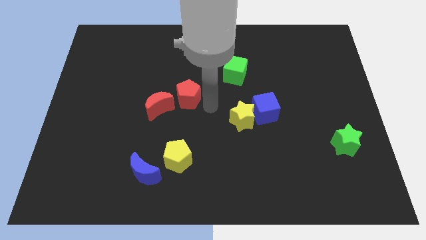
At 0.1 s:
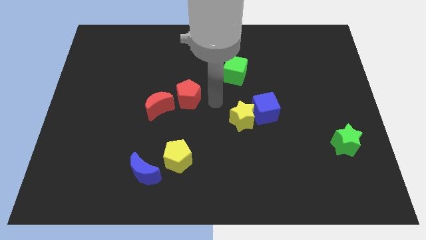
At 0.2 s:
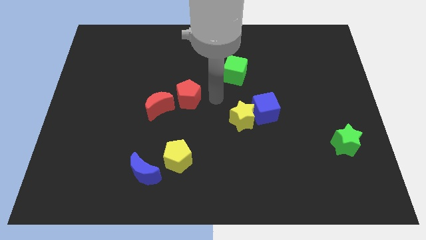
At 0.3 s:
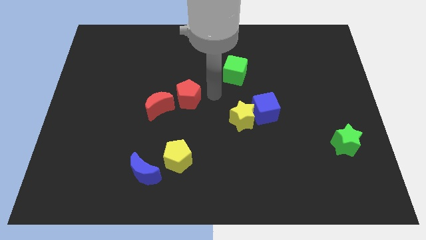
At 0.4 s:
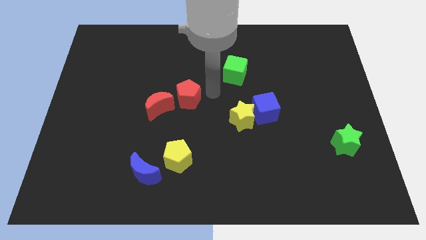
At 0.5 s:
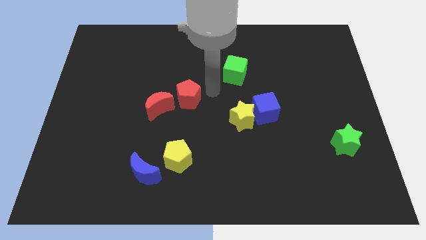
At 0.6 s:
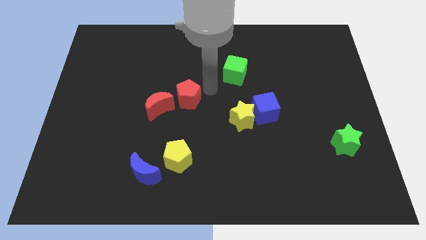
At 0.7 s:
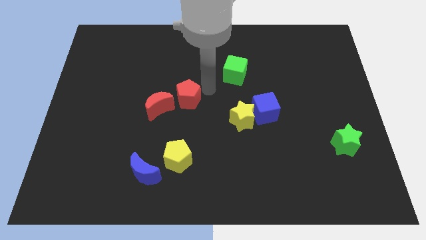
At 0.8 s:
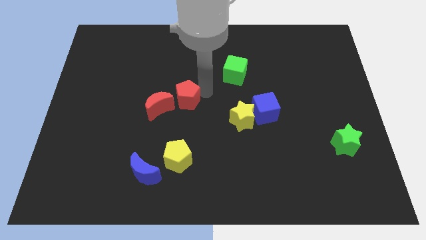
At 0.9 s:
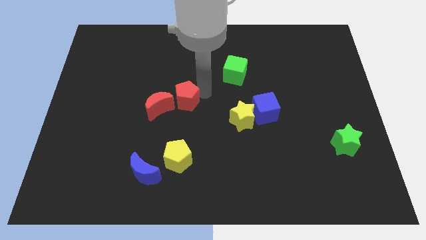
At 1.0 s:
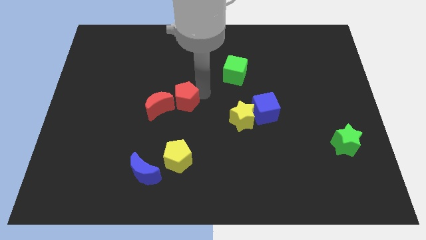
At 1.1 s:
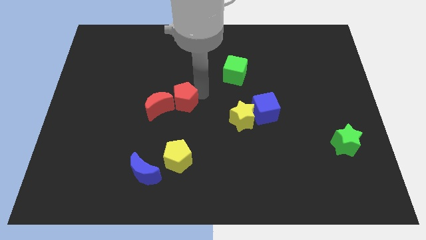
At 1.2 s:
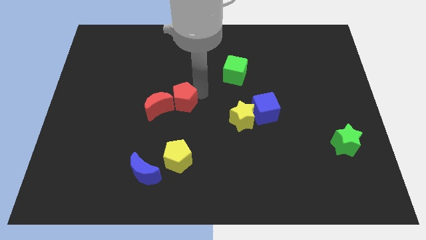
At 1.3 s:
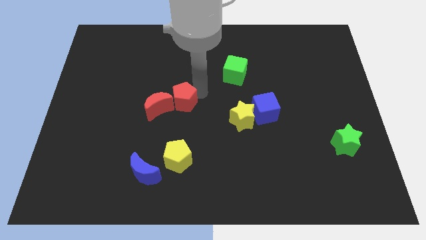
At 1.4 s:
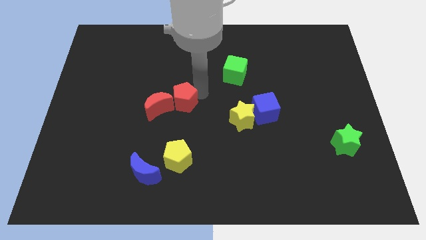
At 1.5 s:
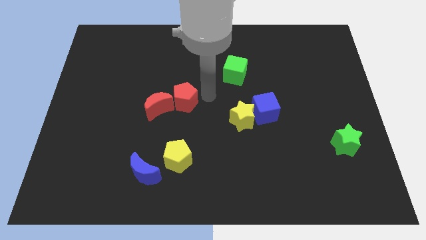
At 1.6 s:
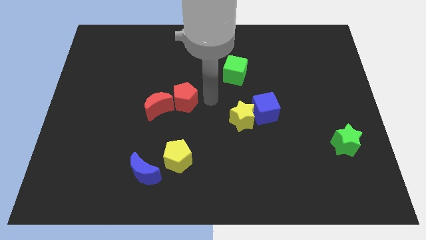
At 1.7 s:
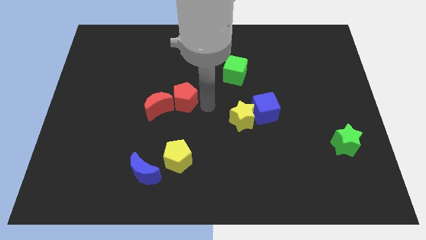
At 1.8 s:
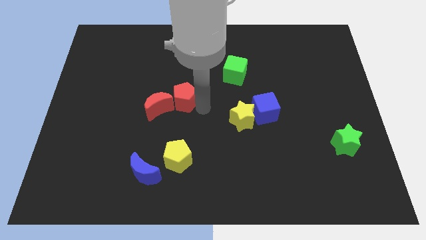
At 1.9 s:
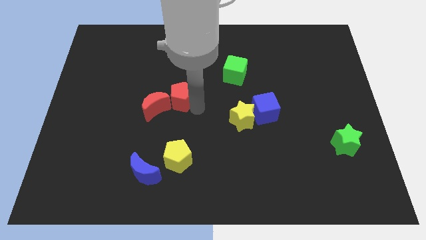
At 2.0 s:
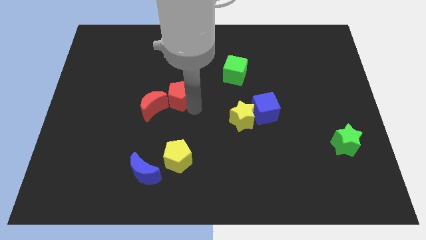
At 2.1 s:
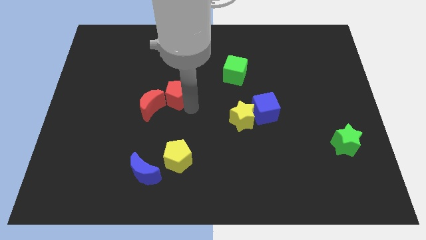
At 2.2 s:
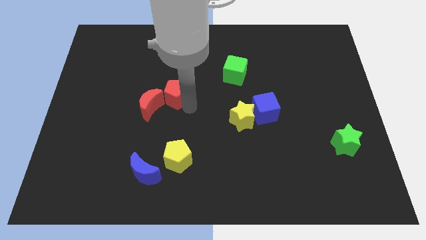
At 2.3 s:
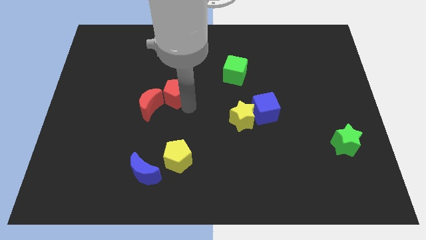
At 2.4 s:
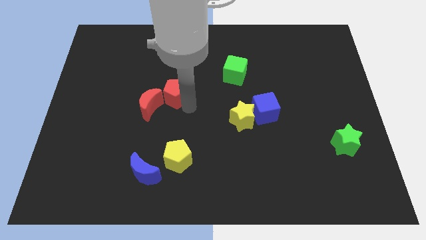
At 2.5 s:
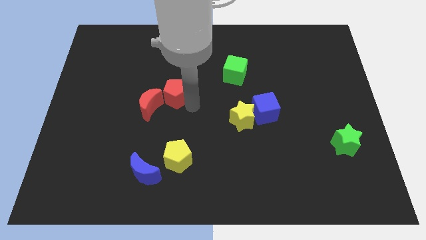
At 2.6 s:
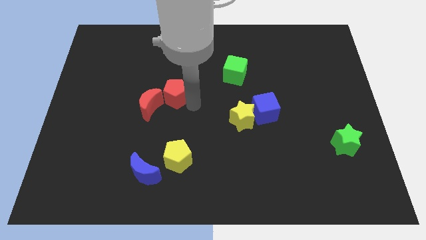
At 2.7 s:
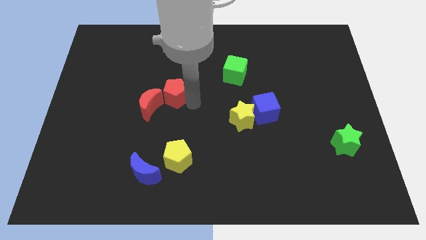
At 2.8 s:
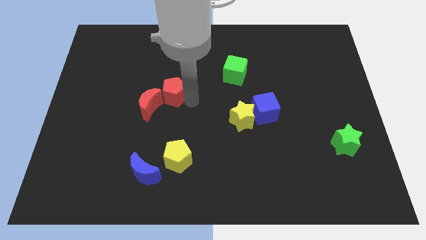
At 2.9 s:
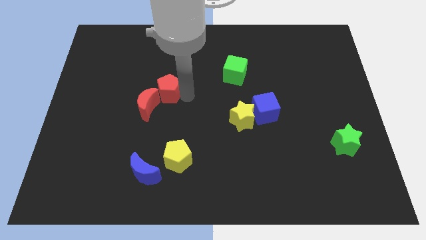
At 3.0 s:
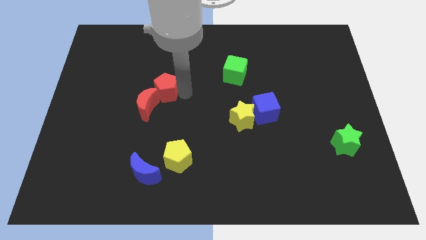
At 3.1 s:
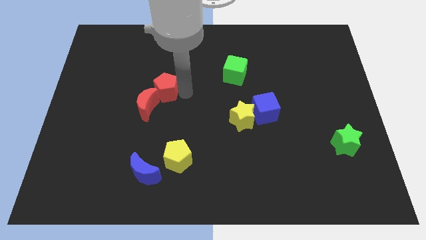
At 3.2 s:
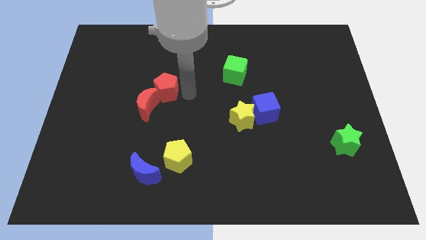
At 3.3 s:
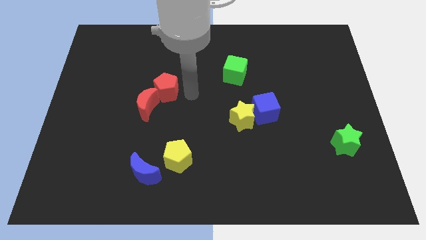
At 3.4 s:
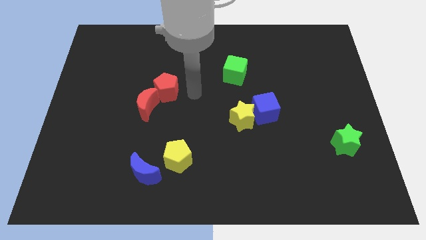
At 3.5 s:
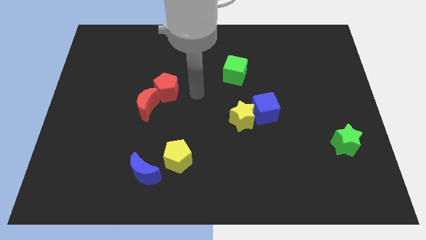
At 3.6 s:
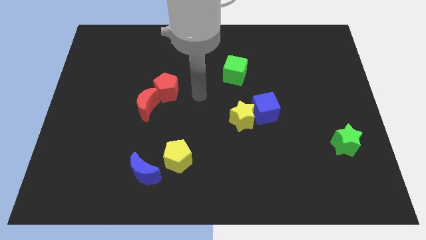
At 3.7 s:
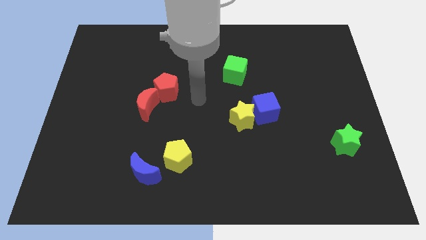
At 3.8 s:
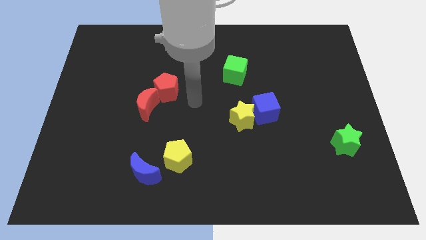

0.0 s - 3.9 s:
move the red pentagon into the red moon to the left

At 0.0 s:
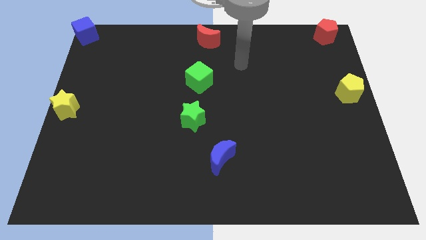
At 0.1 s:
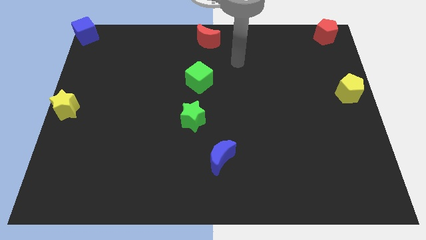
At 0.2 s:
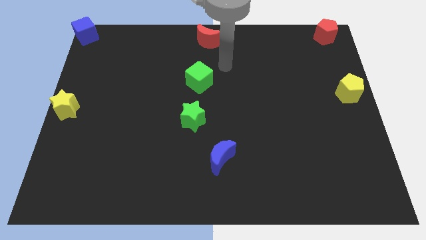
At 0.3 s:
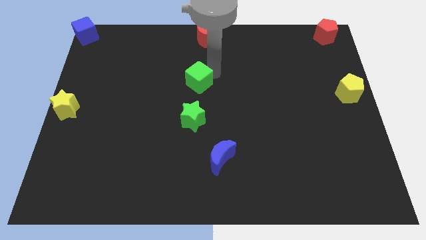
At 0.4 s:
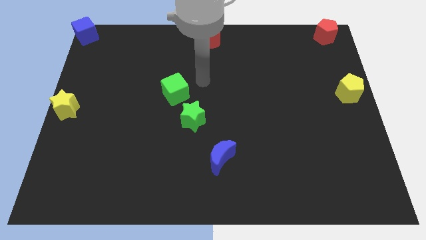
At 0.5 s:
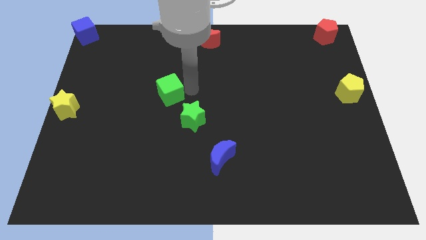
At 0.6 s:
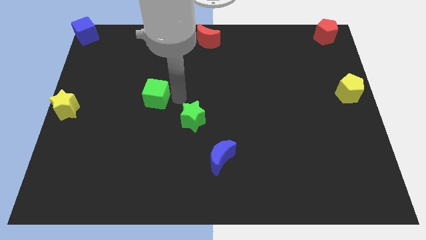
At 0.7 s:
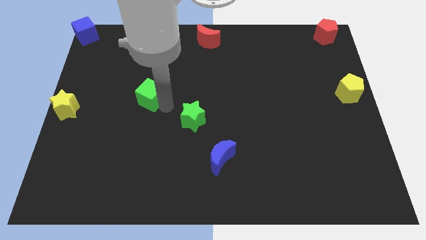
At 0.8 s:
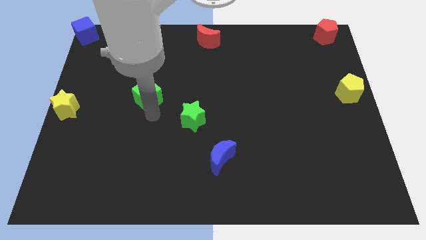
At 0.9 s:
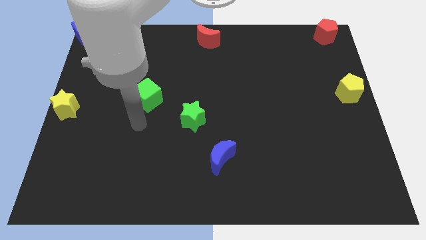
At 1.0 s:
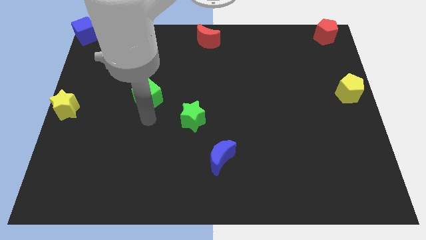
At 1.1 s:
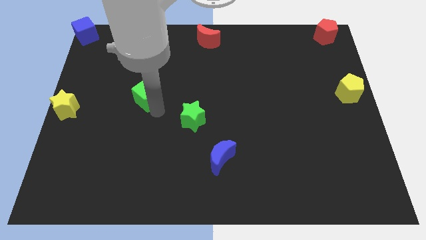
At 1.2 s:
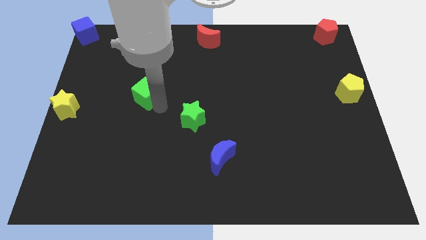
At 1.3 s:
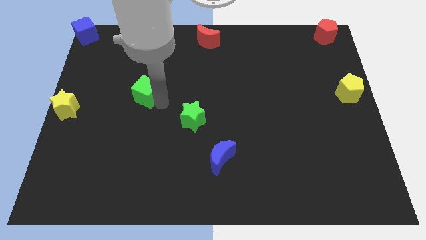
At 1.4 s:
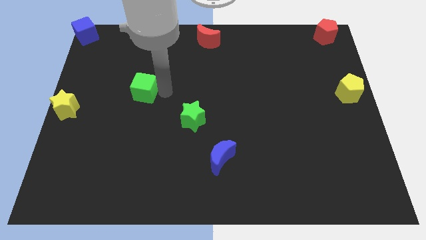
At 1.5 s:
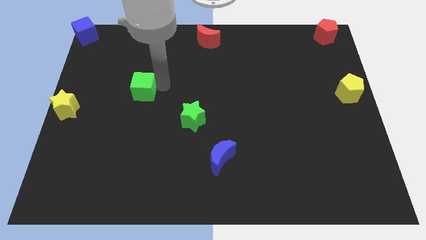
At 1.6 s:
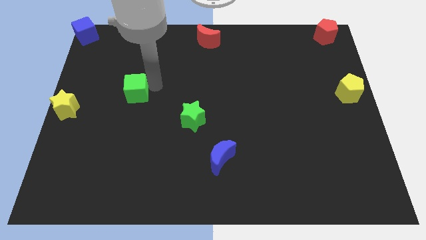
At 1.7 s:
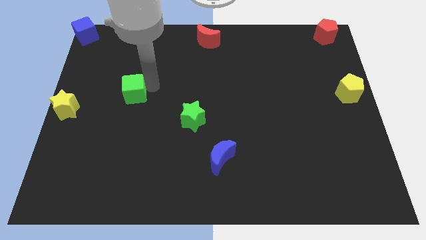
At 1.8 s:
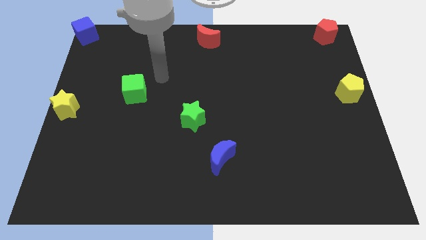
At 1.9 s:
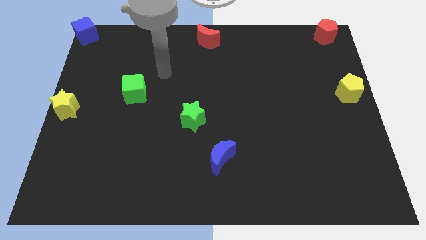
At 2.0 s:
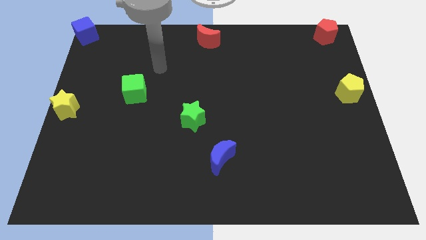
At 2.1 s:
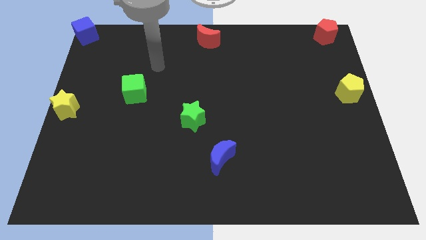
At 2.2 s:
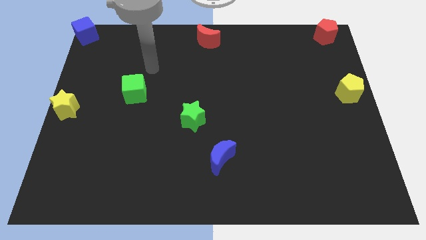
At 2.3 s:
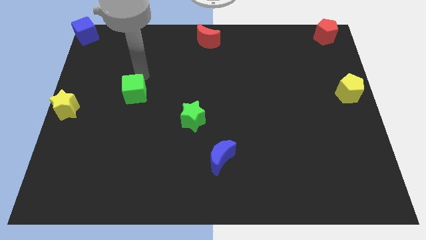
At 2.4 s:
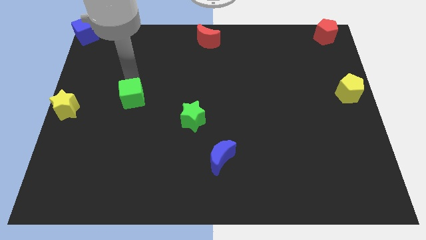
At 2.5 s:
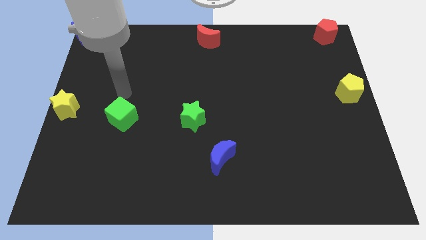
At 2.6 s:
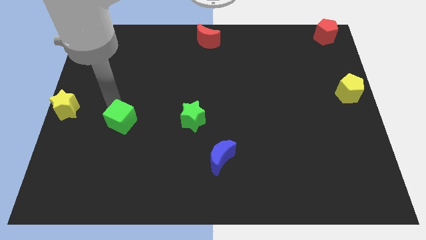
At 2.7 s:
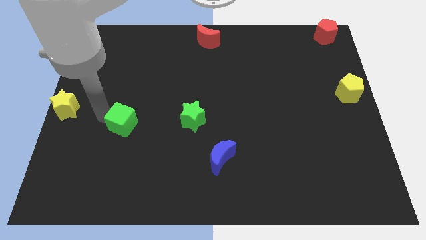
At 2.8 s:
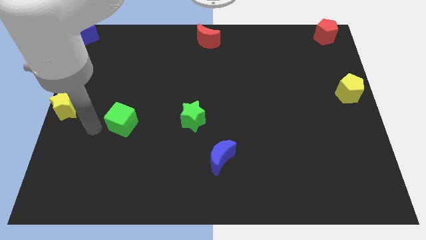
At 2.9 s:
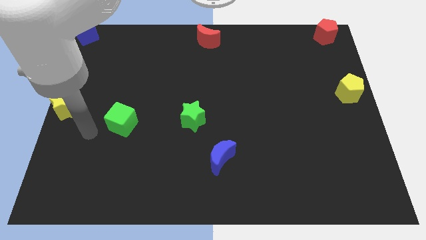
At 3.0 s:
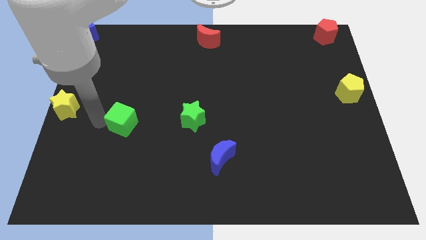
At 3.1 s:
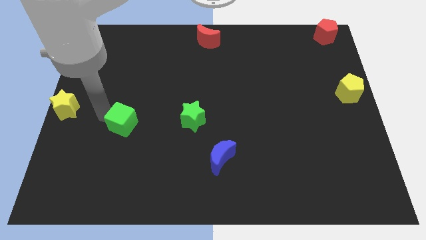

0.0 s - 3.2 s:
arrange the green cube horizontally to the left side of the green star

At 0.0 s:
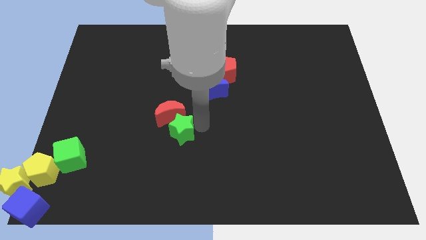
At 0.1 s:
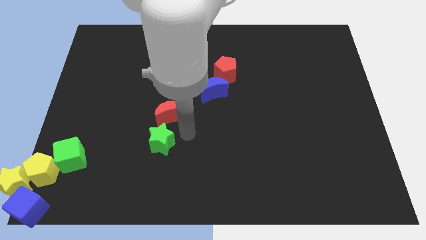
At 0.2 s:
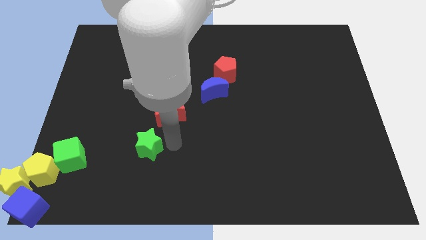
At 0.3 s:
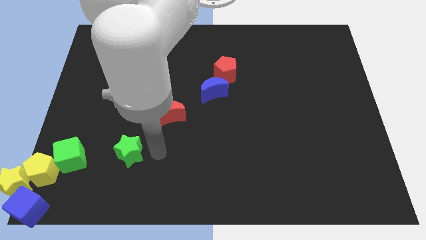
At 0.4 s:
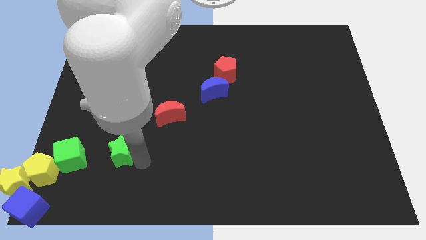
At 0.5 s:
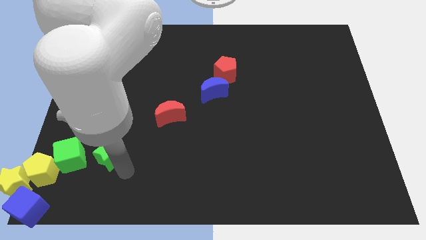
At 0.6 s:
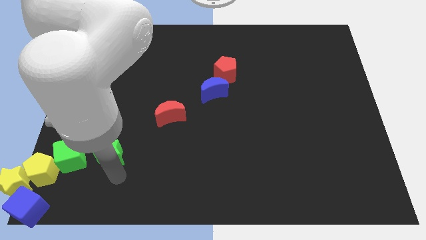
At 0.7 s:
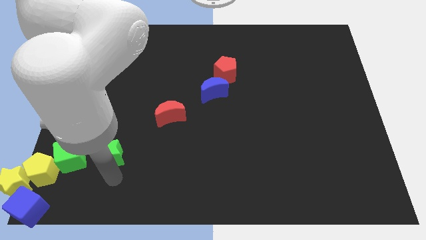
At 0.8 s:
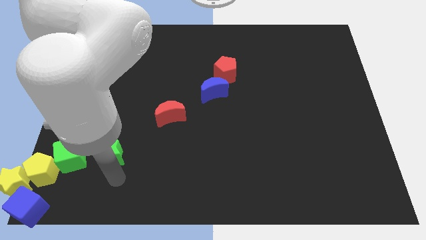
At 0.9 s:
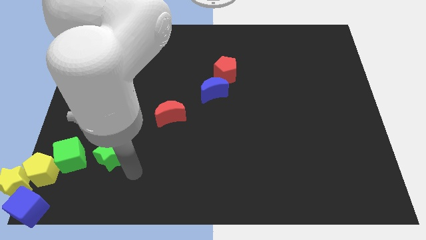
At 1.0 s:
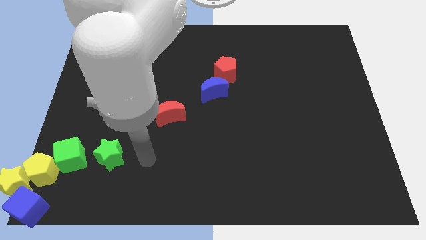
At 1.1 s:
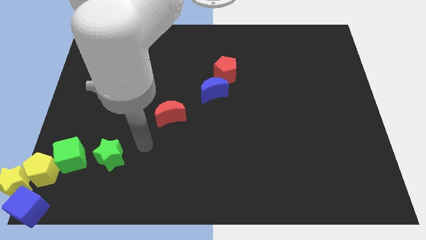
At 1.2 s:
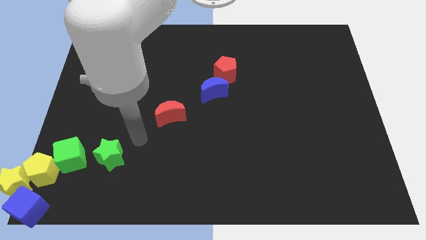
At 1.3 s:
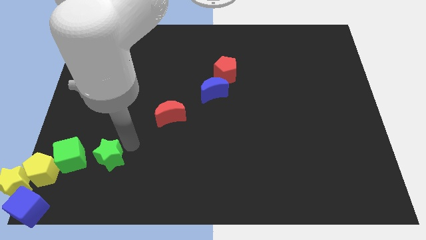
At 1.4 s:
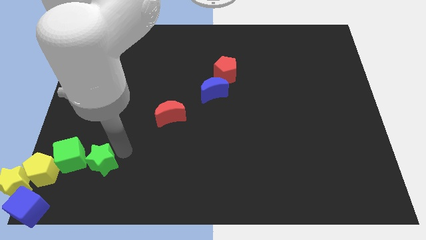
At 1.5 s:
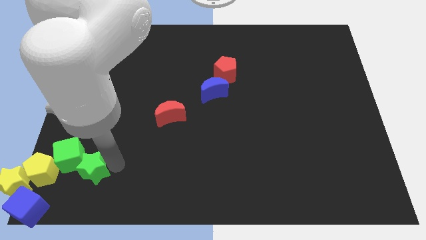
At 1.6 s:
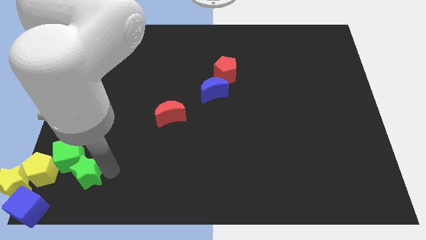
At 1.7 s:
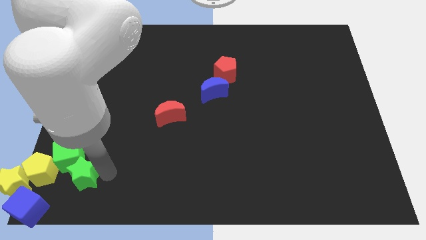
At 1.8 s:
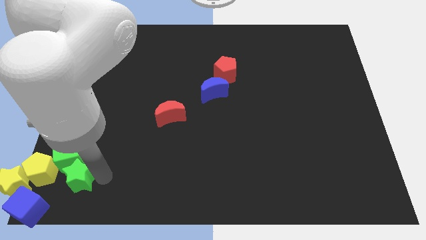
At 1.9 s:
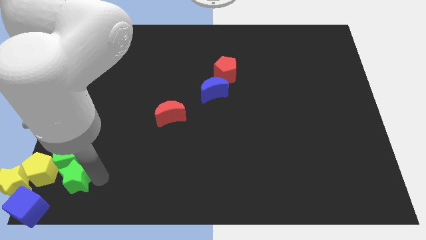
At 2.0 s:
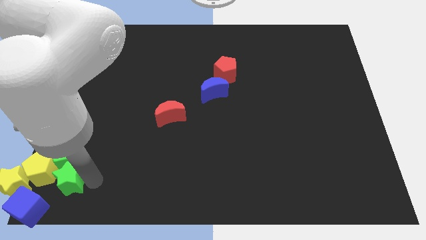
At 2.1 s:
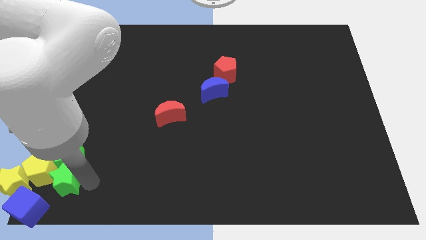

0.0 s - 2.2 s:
place green star below green cube
